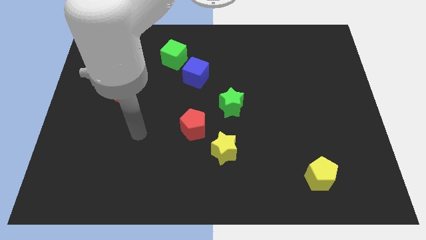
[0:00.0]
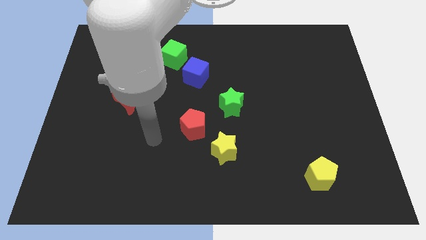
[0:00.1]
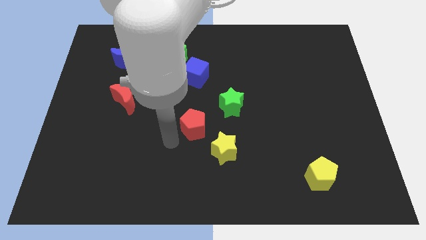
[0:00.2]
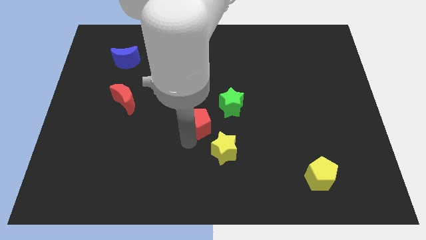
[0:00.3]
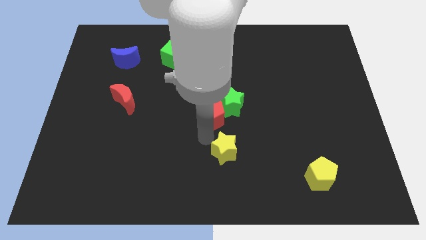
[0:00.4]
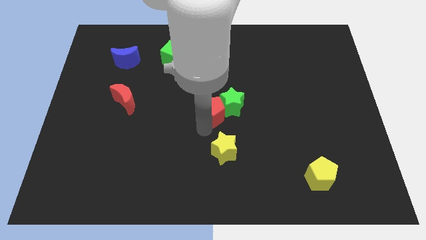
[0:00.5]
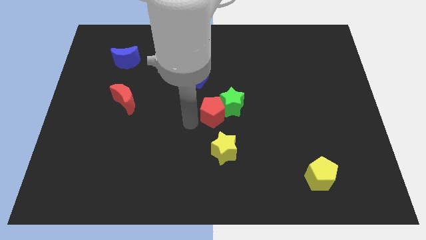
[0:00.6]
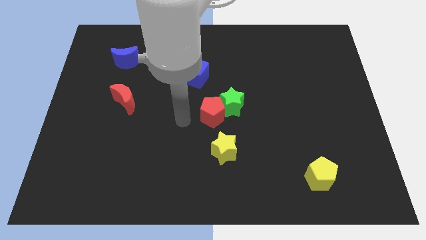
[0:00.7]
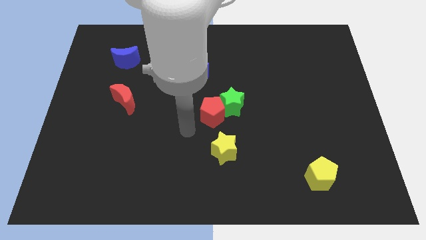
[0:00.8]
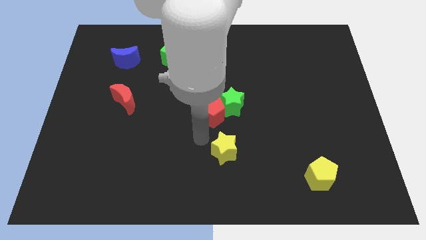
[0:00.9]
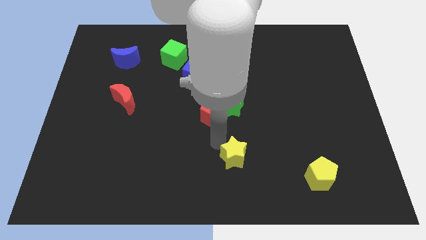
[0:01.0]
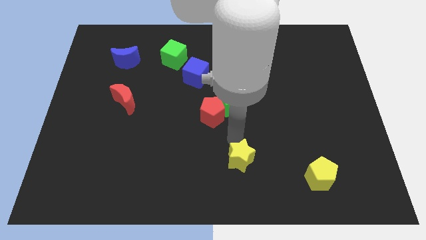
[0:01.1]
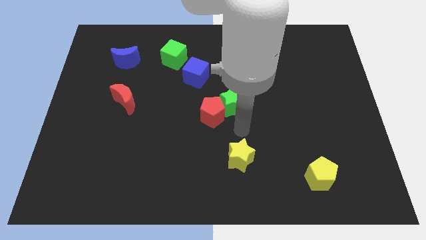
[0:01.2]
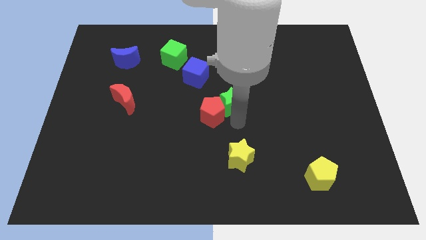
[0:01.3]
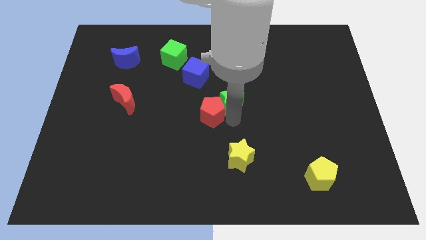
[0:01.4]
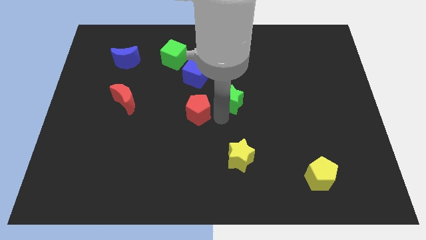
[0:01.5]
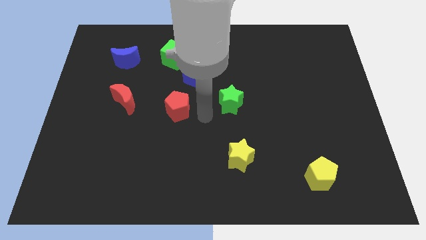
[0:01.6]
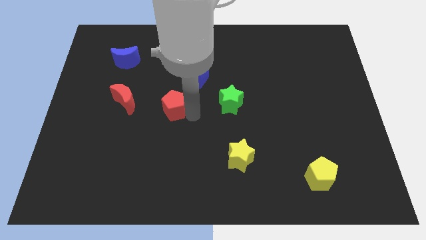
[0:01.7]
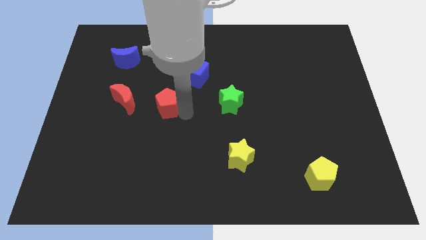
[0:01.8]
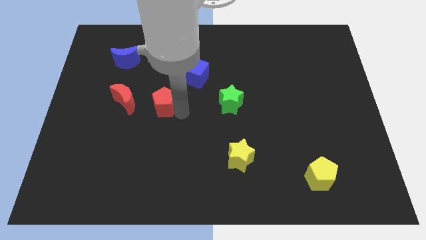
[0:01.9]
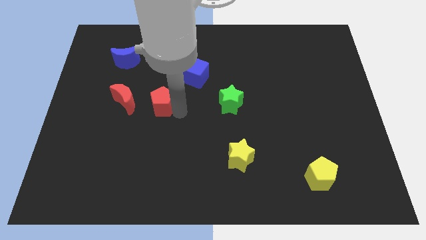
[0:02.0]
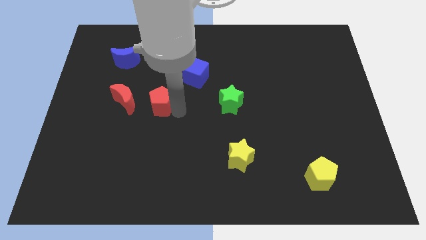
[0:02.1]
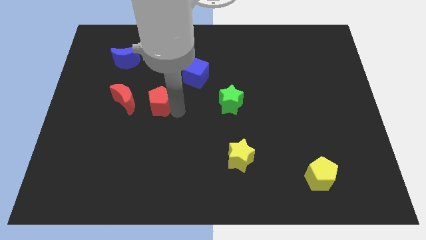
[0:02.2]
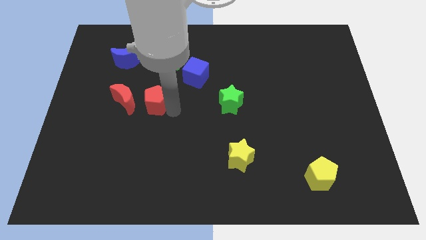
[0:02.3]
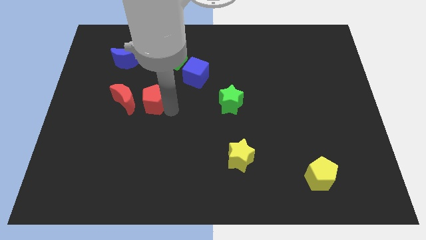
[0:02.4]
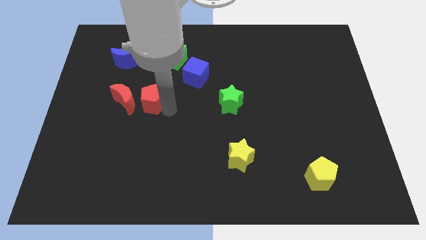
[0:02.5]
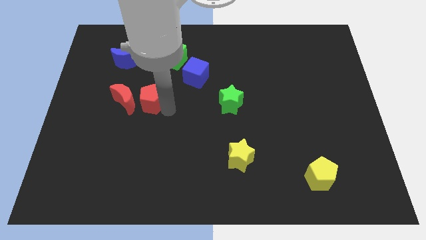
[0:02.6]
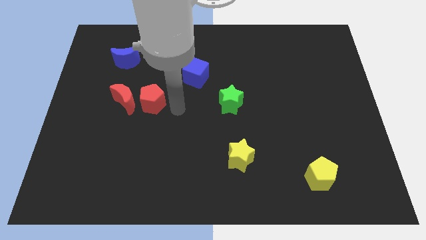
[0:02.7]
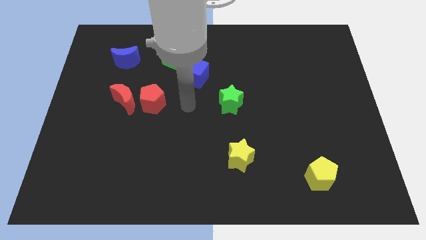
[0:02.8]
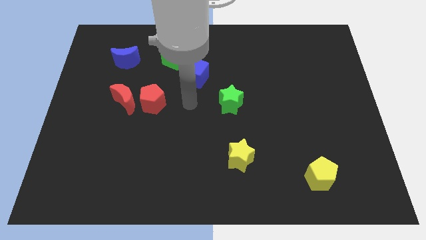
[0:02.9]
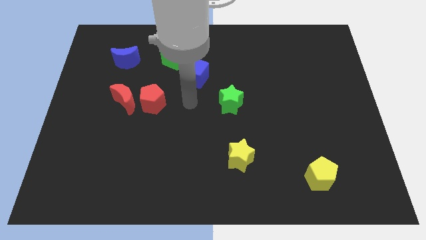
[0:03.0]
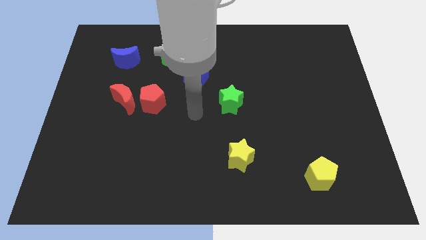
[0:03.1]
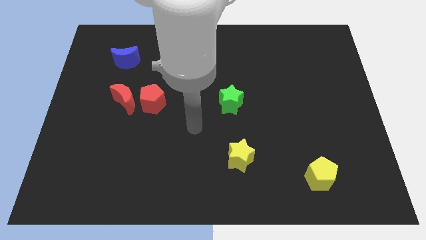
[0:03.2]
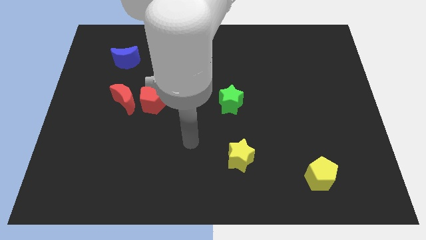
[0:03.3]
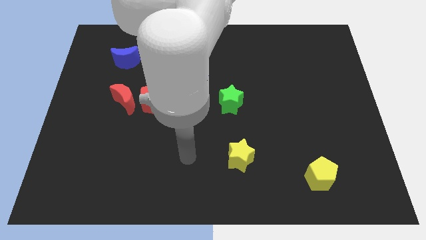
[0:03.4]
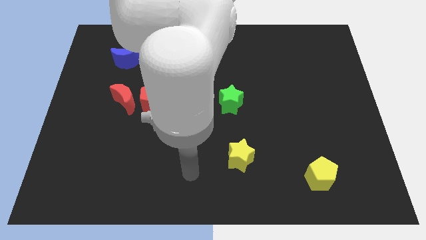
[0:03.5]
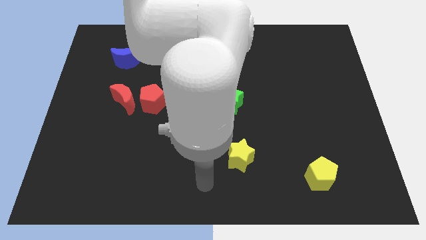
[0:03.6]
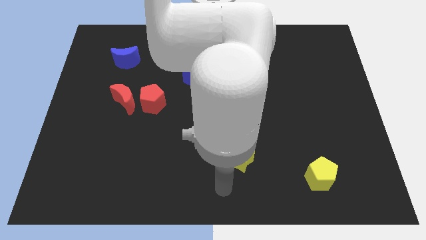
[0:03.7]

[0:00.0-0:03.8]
push the red pentagon to the right of the red crescent

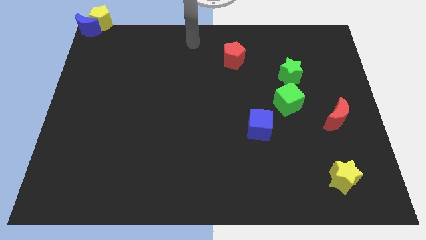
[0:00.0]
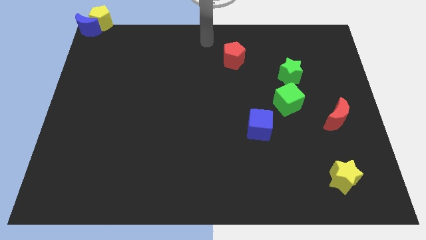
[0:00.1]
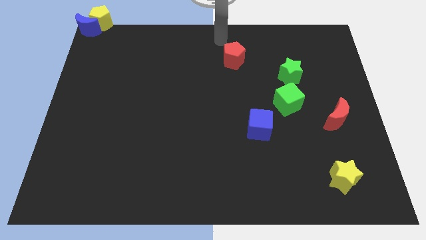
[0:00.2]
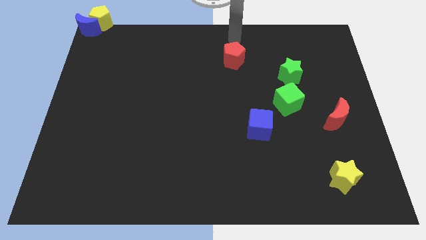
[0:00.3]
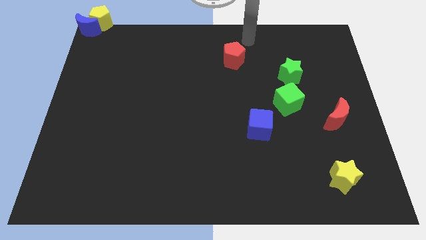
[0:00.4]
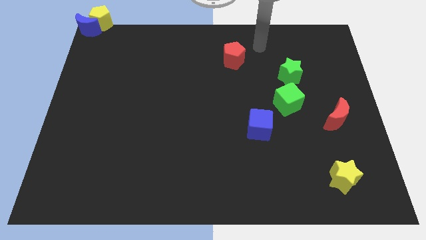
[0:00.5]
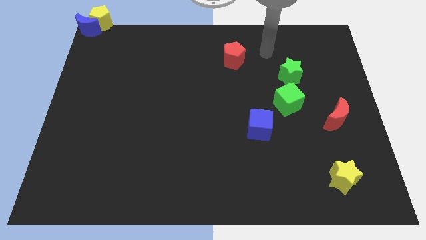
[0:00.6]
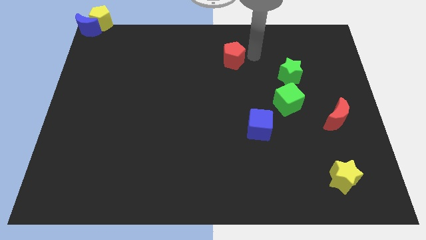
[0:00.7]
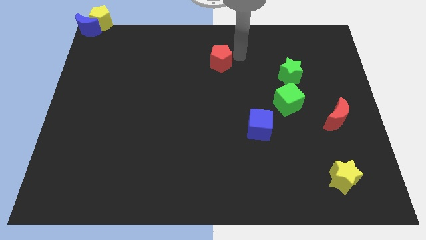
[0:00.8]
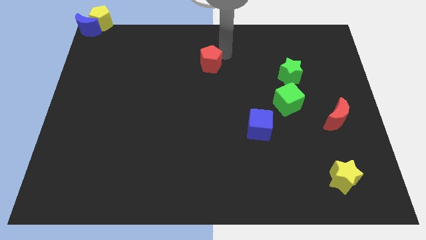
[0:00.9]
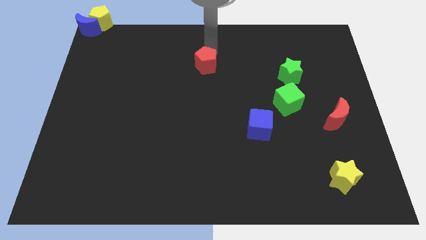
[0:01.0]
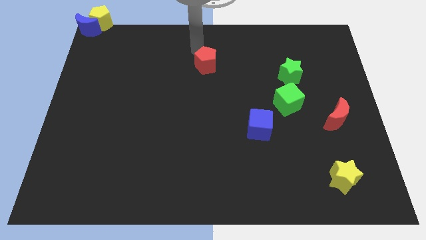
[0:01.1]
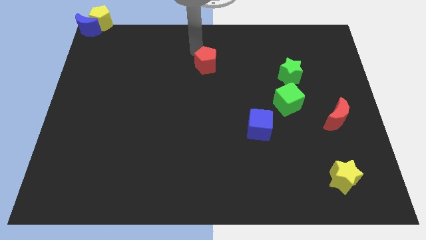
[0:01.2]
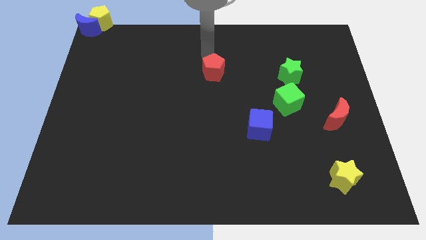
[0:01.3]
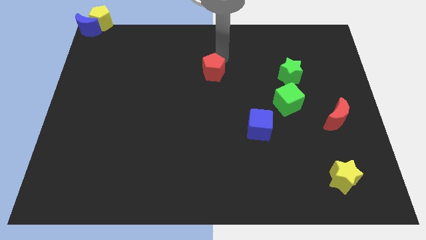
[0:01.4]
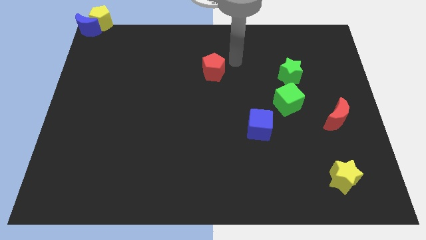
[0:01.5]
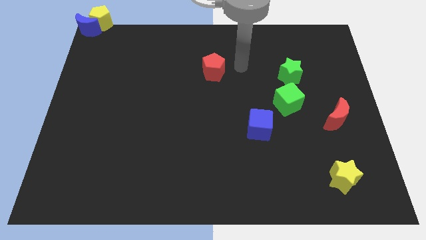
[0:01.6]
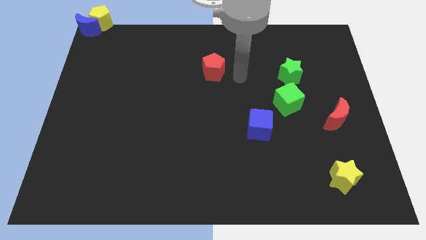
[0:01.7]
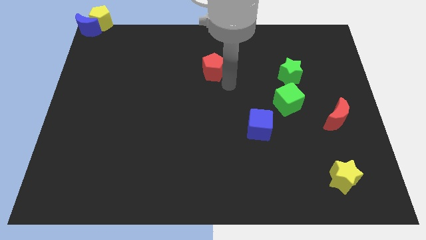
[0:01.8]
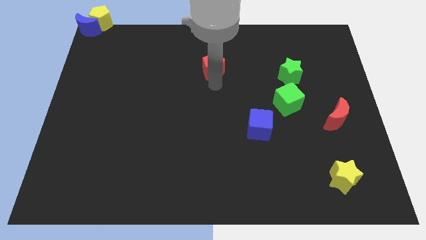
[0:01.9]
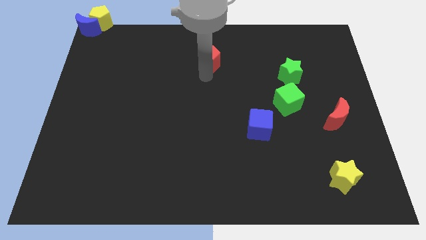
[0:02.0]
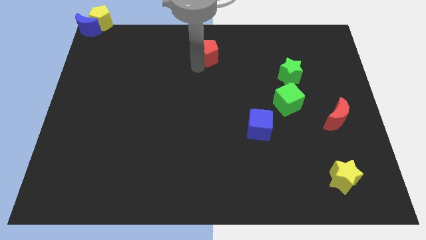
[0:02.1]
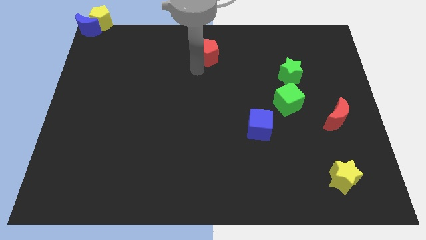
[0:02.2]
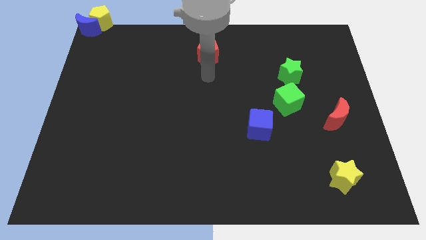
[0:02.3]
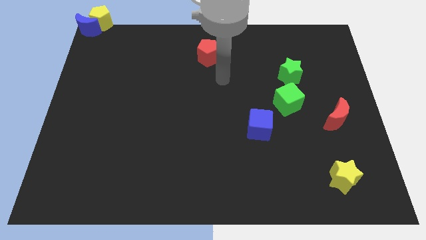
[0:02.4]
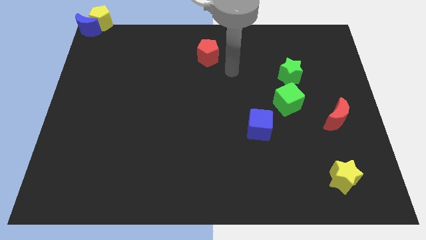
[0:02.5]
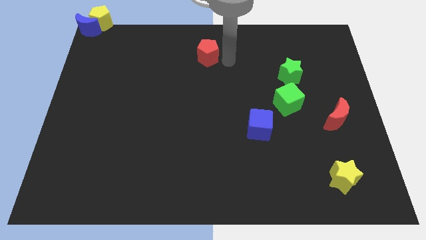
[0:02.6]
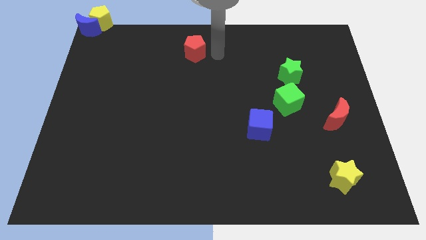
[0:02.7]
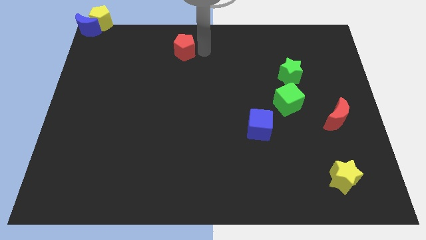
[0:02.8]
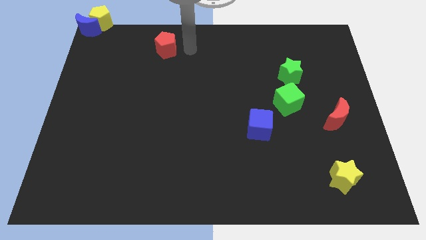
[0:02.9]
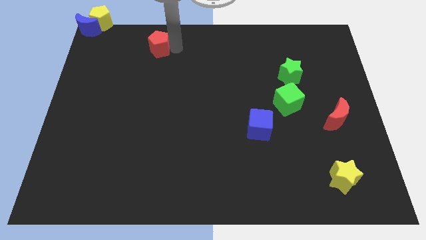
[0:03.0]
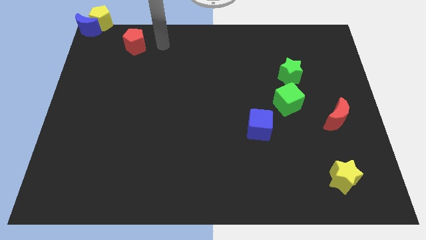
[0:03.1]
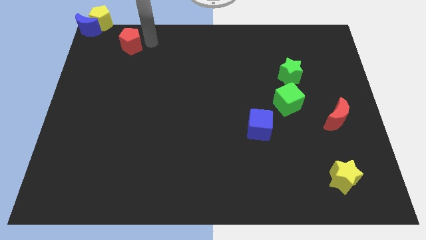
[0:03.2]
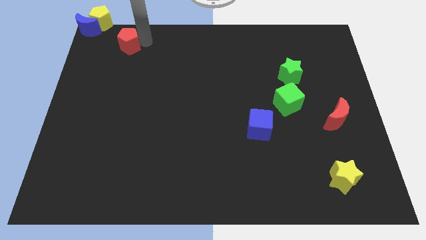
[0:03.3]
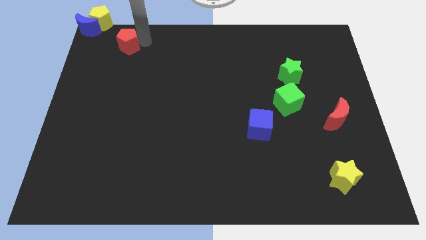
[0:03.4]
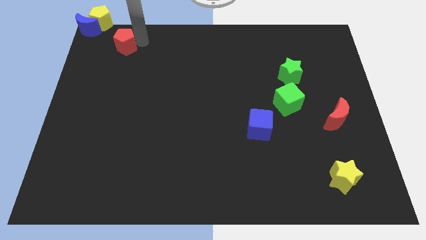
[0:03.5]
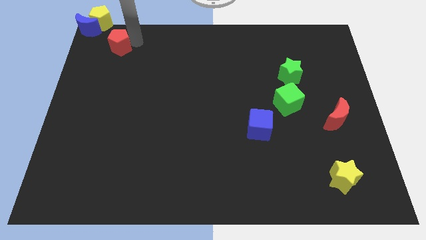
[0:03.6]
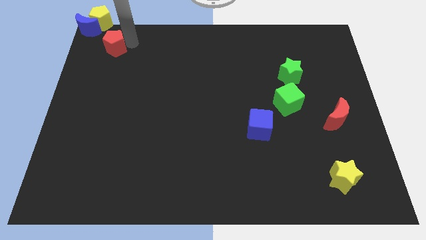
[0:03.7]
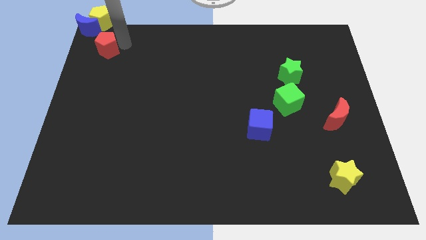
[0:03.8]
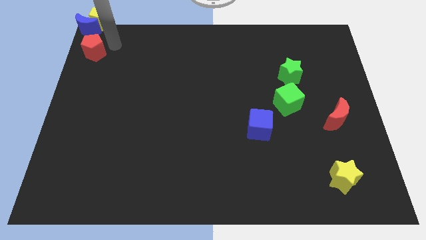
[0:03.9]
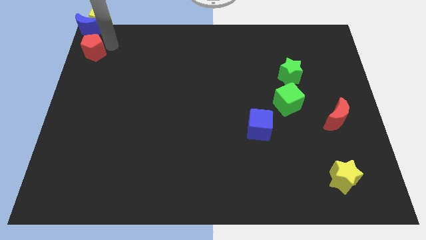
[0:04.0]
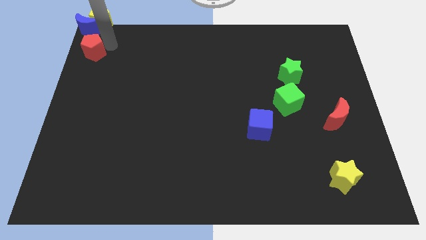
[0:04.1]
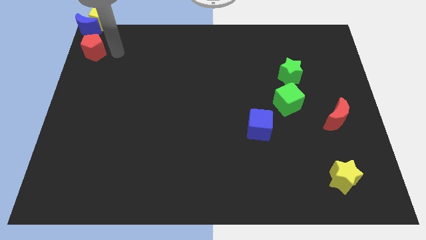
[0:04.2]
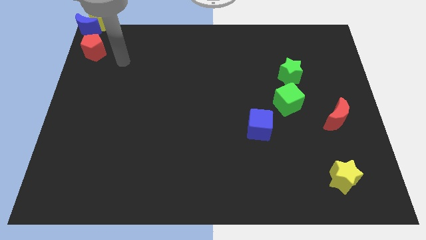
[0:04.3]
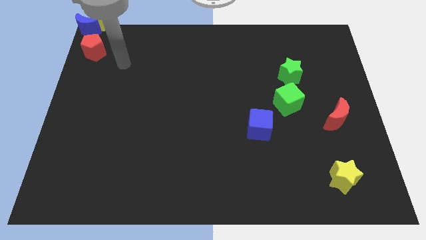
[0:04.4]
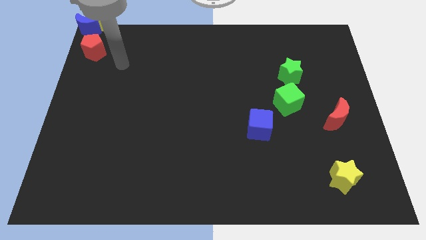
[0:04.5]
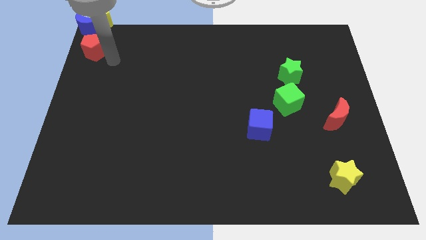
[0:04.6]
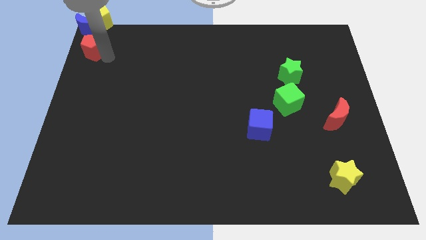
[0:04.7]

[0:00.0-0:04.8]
put the red pentagon vertically below the blue moon

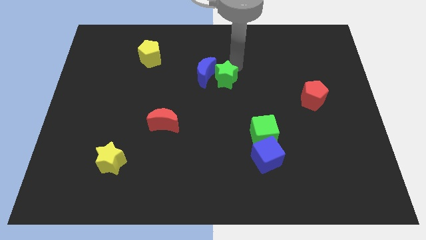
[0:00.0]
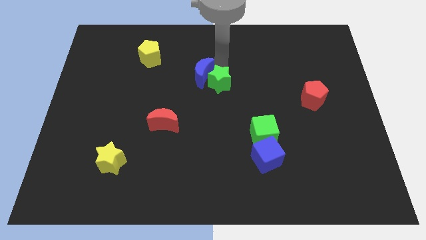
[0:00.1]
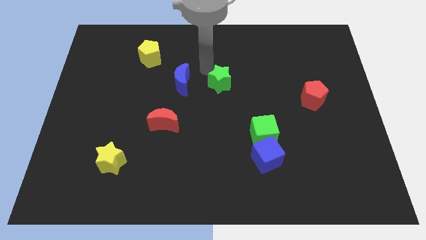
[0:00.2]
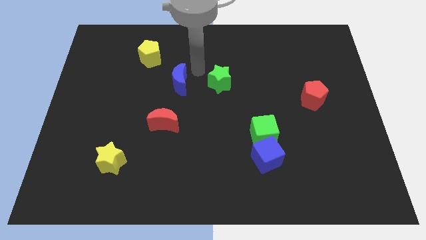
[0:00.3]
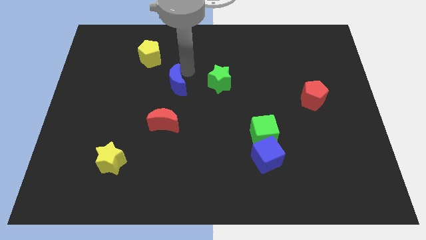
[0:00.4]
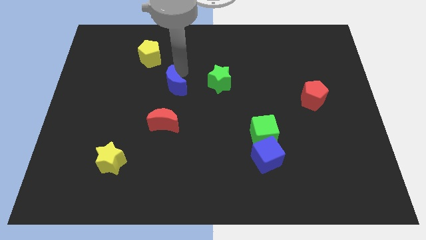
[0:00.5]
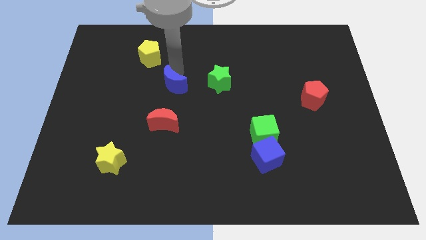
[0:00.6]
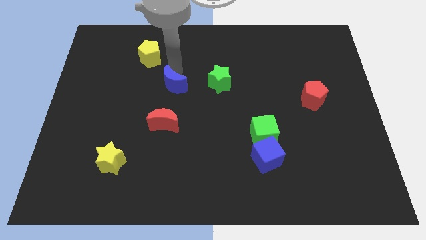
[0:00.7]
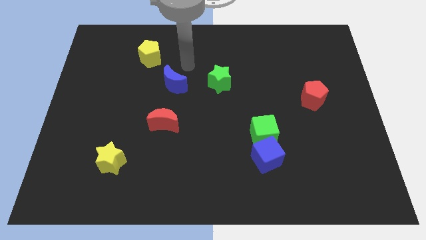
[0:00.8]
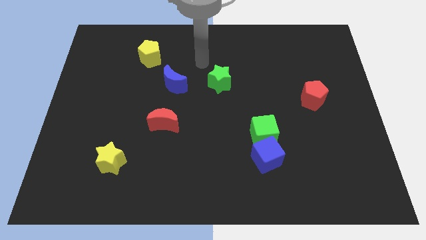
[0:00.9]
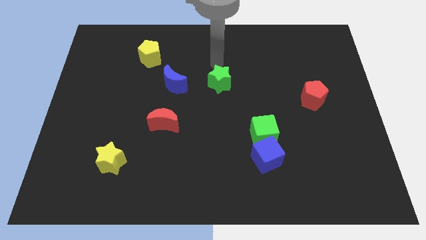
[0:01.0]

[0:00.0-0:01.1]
separate the blue crescent from the green star
